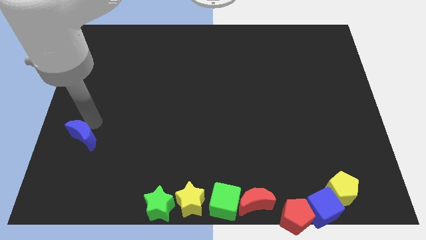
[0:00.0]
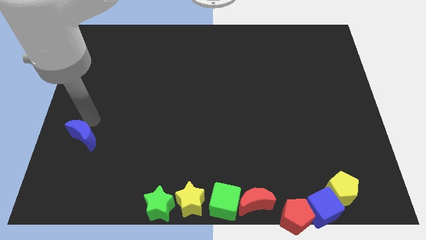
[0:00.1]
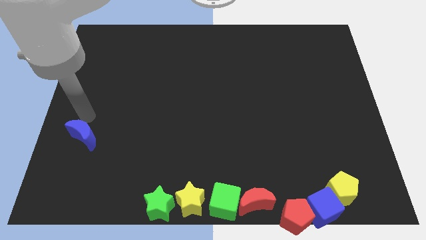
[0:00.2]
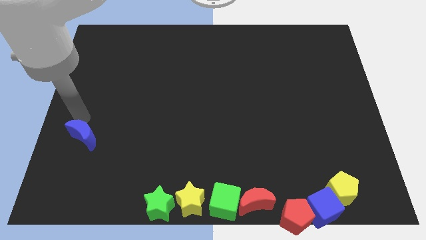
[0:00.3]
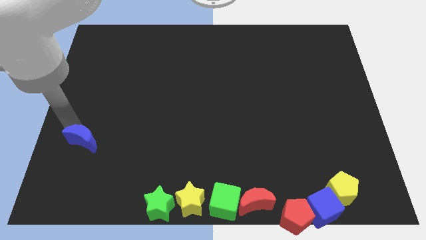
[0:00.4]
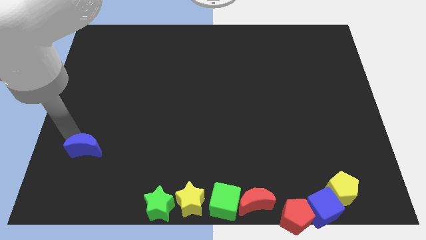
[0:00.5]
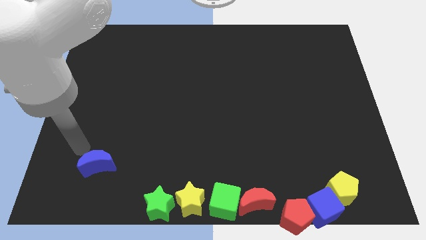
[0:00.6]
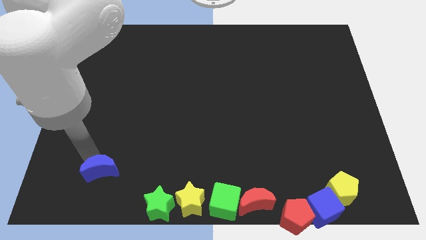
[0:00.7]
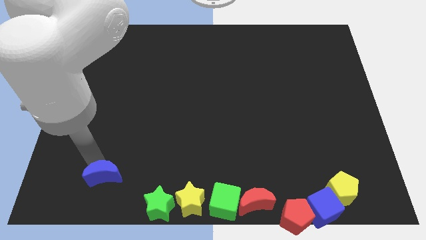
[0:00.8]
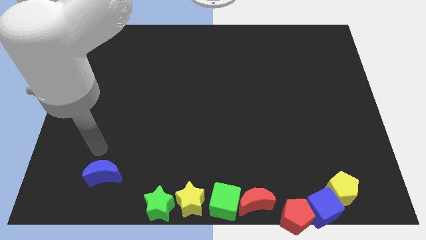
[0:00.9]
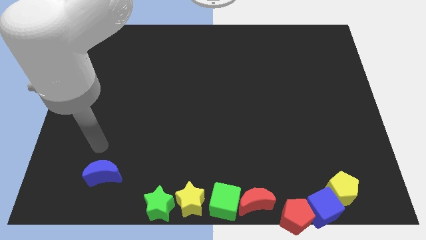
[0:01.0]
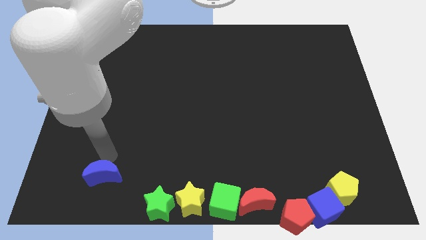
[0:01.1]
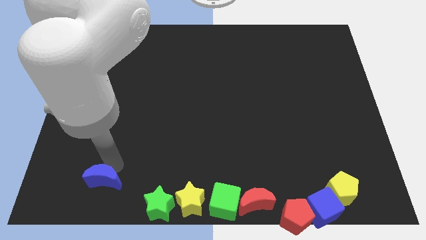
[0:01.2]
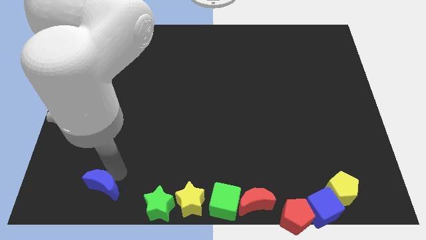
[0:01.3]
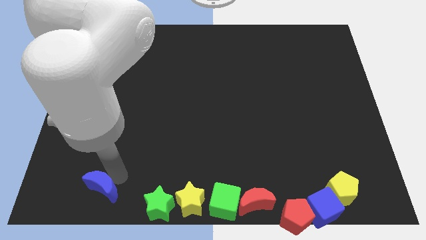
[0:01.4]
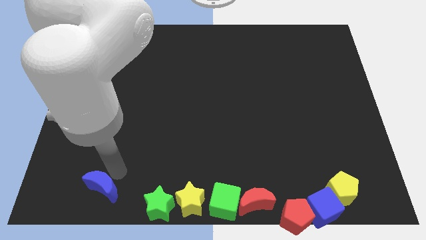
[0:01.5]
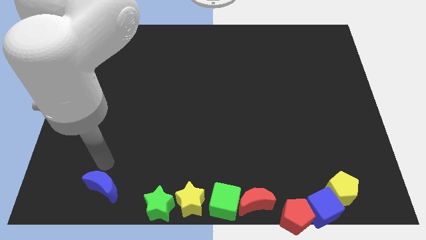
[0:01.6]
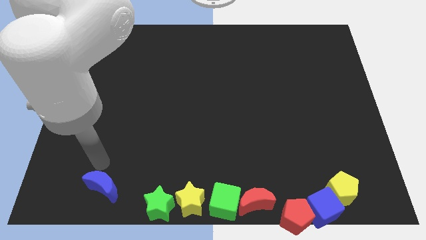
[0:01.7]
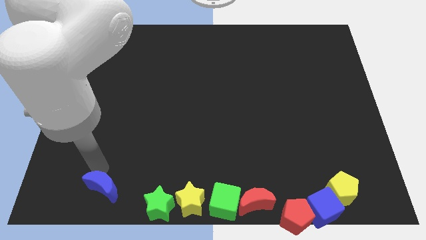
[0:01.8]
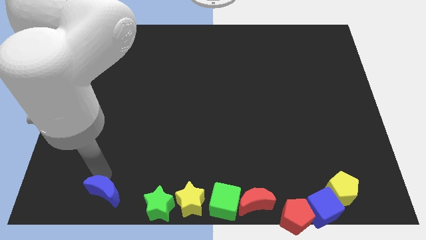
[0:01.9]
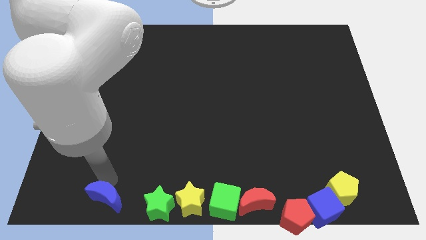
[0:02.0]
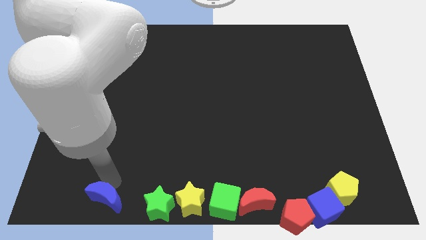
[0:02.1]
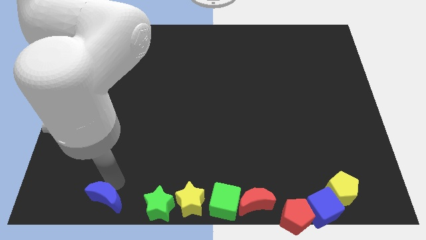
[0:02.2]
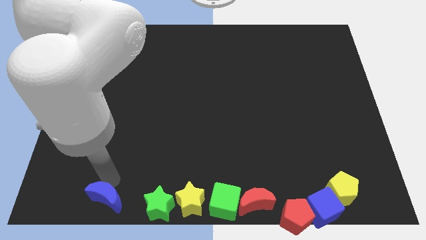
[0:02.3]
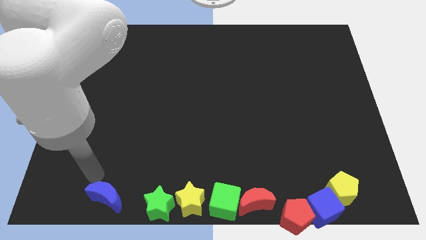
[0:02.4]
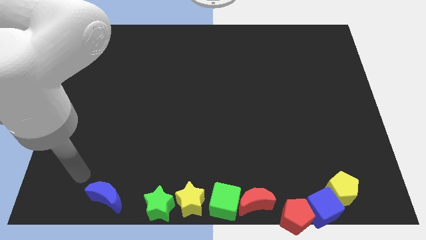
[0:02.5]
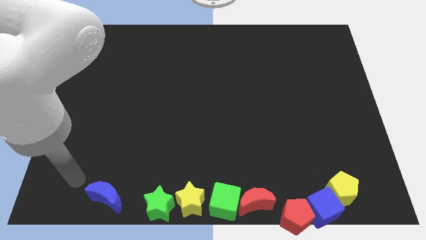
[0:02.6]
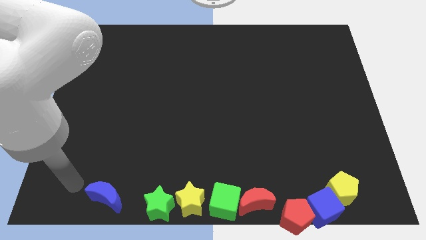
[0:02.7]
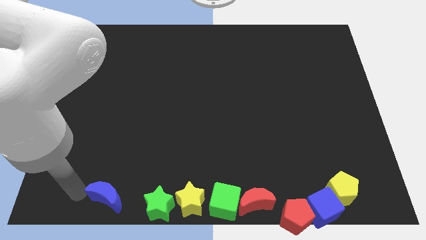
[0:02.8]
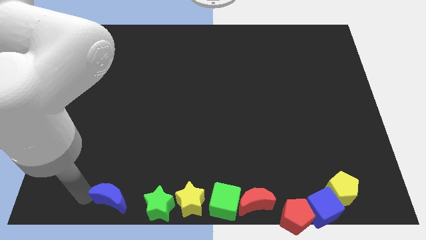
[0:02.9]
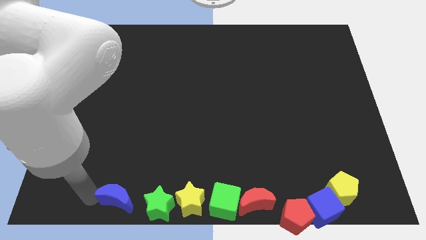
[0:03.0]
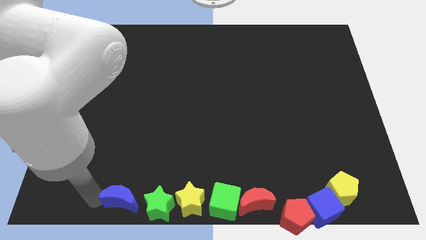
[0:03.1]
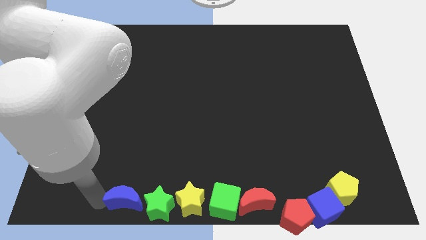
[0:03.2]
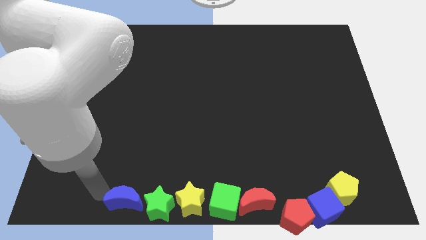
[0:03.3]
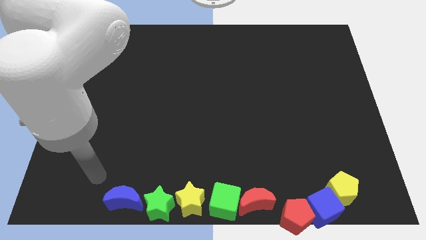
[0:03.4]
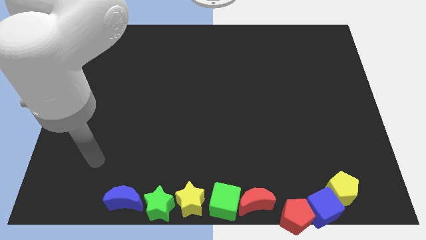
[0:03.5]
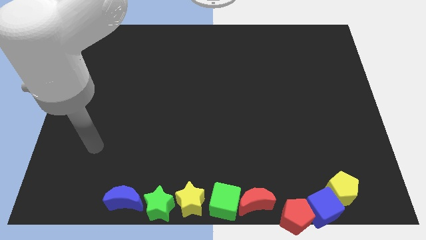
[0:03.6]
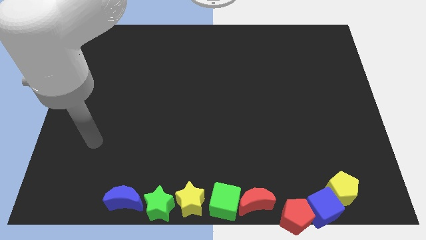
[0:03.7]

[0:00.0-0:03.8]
place the blue moon to the left of green star

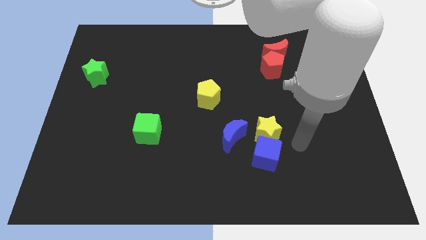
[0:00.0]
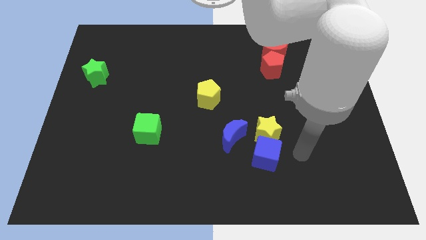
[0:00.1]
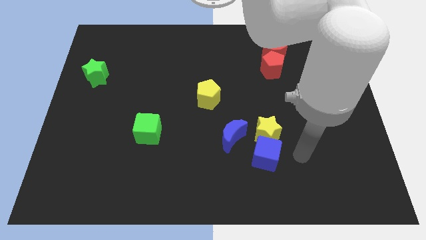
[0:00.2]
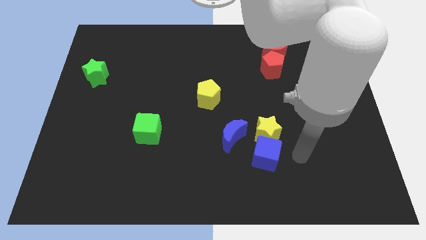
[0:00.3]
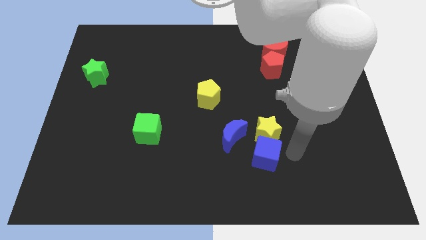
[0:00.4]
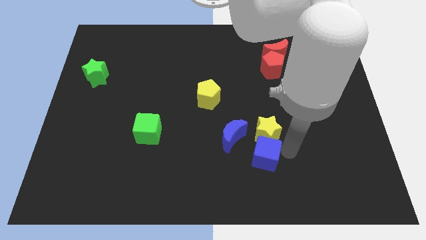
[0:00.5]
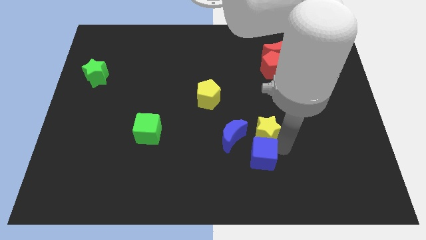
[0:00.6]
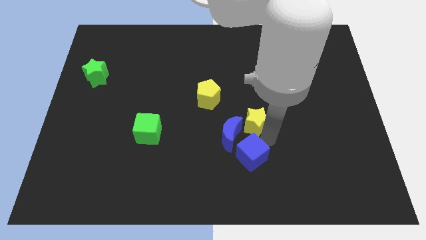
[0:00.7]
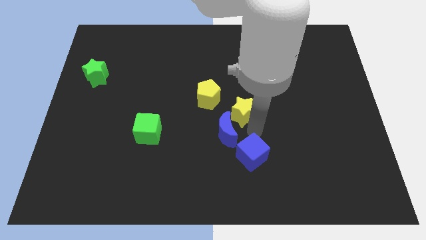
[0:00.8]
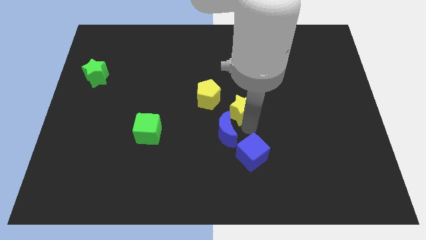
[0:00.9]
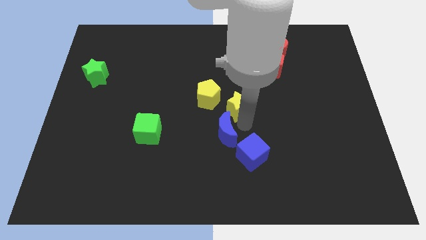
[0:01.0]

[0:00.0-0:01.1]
slide yellow star towards yellow pentagon

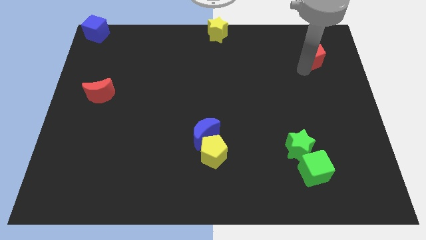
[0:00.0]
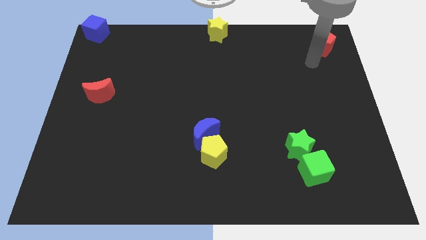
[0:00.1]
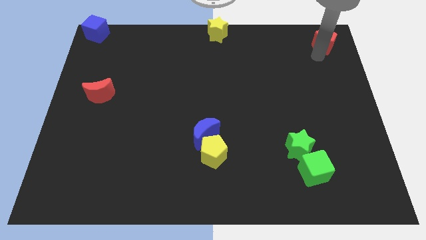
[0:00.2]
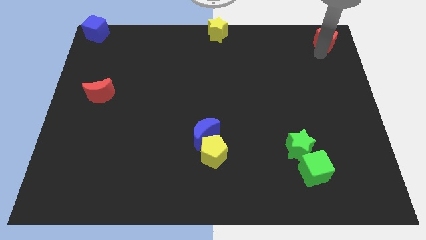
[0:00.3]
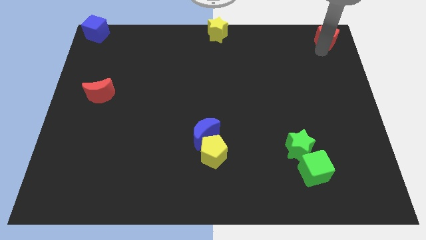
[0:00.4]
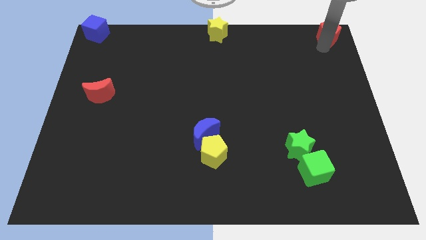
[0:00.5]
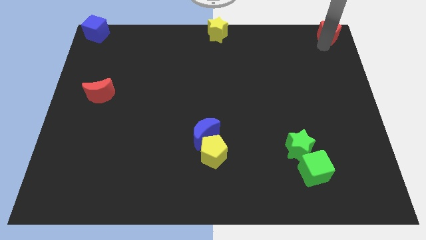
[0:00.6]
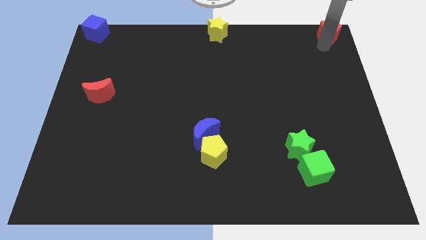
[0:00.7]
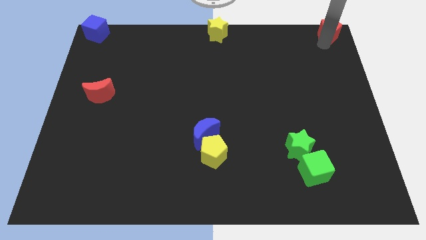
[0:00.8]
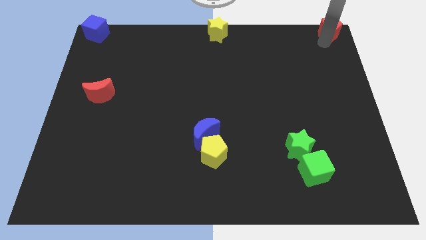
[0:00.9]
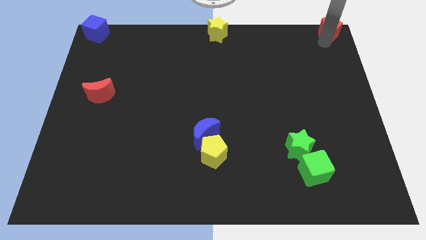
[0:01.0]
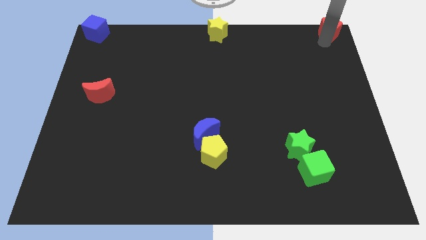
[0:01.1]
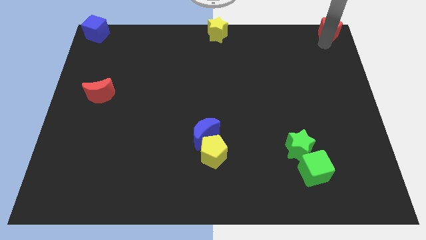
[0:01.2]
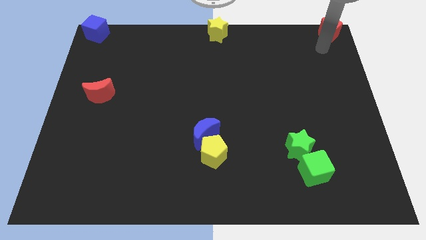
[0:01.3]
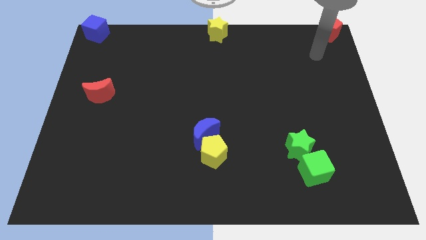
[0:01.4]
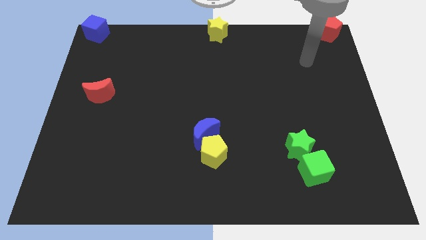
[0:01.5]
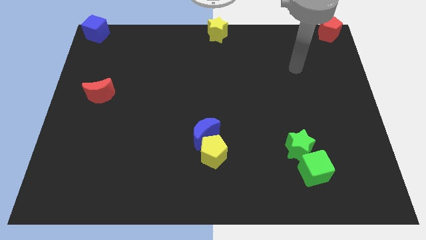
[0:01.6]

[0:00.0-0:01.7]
place the red pentagon towards the top right corner of the board

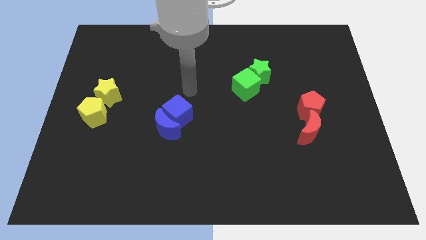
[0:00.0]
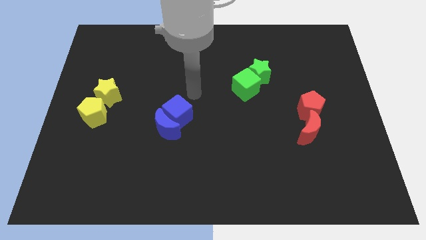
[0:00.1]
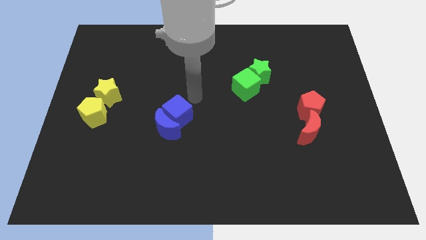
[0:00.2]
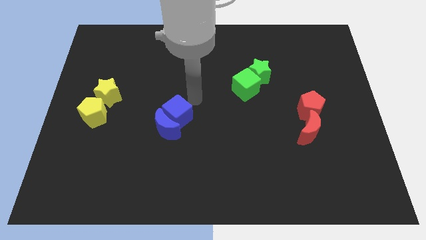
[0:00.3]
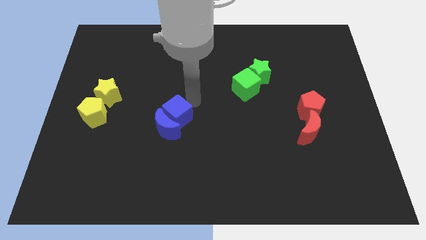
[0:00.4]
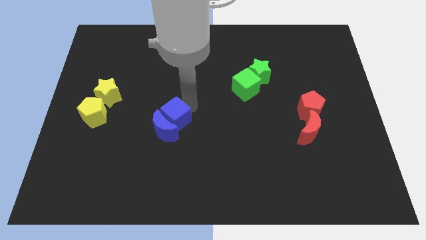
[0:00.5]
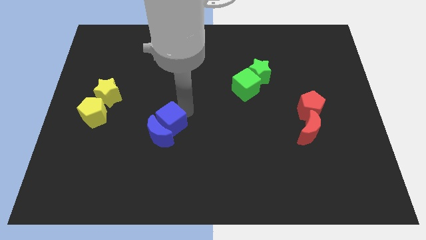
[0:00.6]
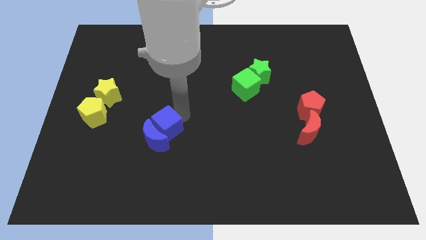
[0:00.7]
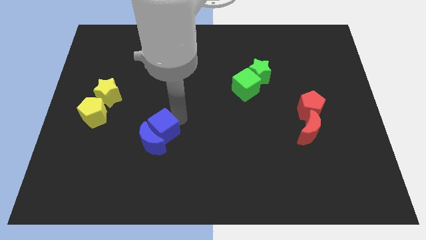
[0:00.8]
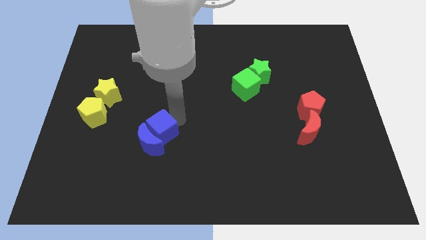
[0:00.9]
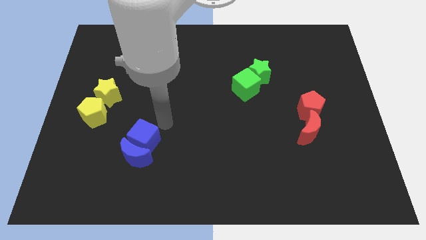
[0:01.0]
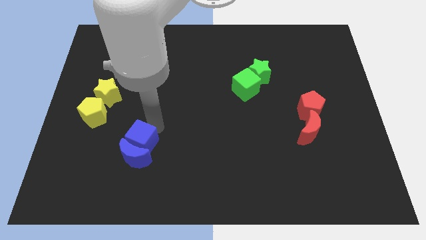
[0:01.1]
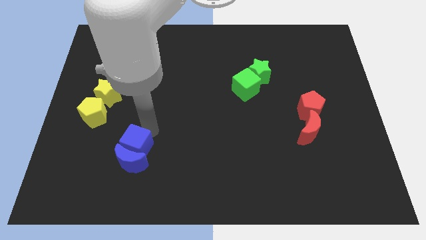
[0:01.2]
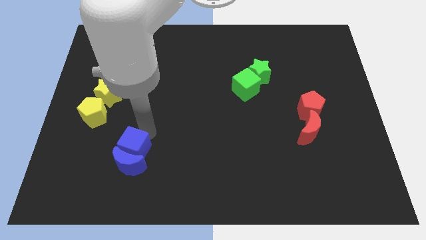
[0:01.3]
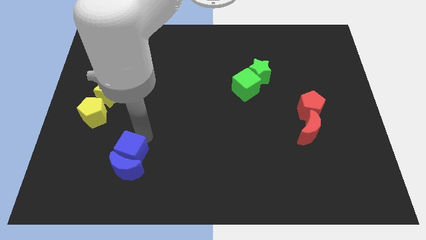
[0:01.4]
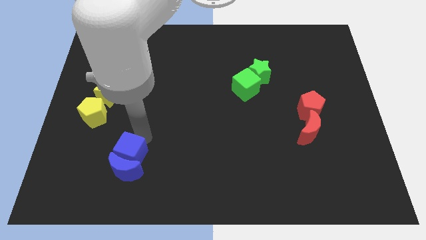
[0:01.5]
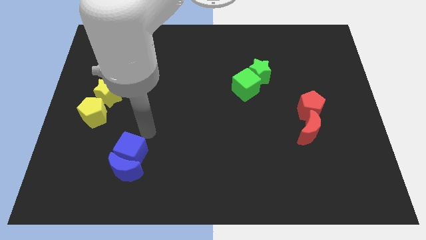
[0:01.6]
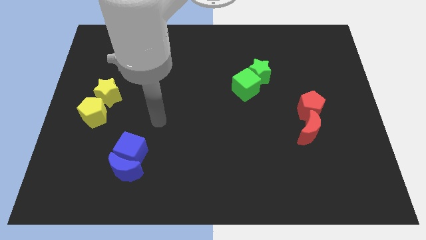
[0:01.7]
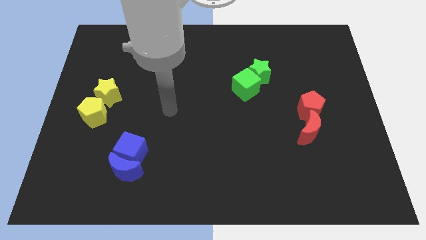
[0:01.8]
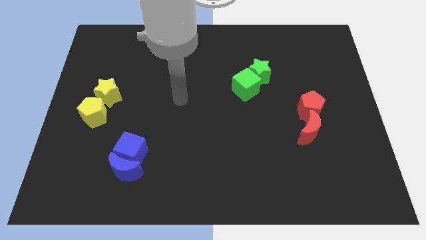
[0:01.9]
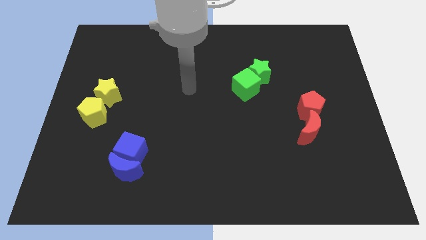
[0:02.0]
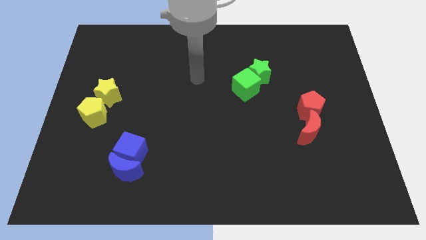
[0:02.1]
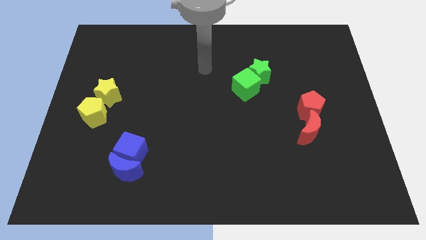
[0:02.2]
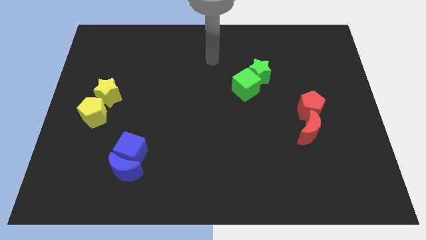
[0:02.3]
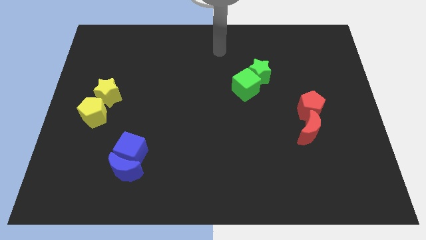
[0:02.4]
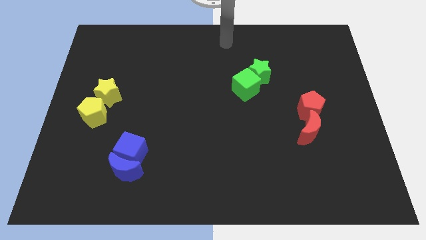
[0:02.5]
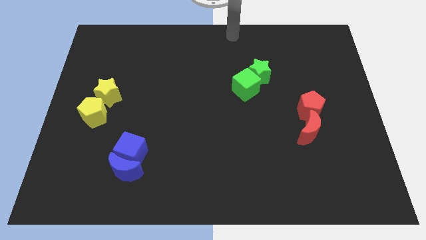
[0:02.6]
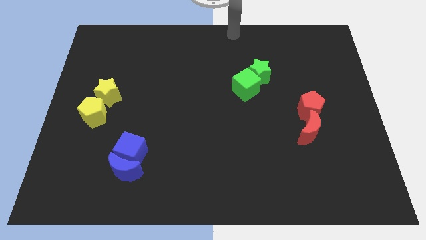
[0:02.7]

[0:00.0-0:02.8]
push the blue blocks to the bottom left side of the board
